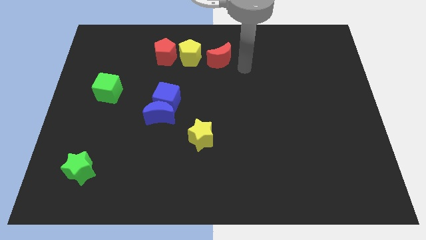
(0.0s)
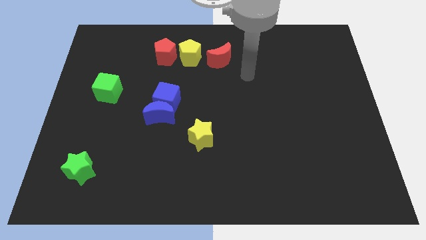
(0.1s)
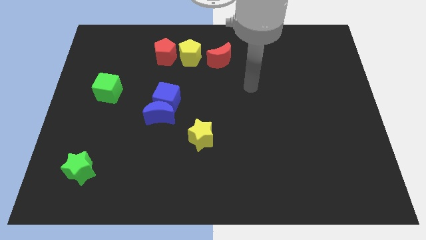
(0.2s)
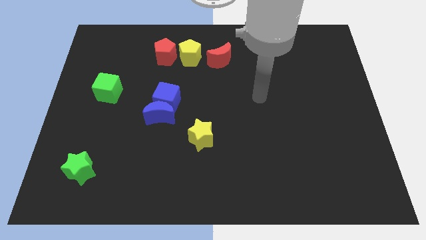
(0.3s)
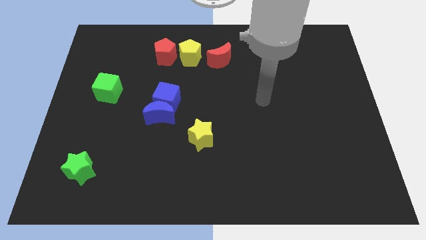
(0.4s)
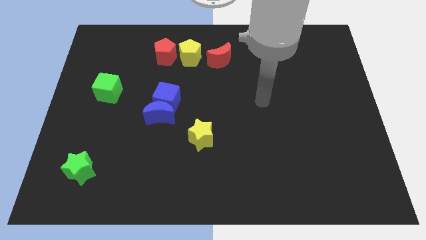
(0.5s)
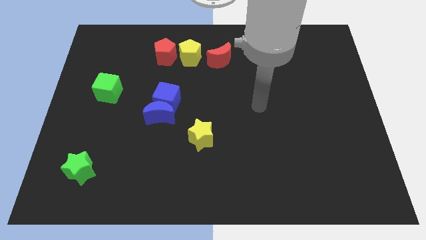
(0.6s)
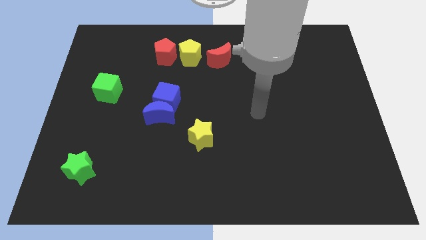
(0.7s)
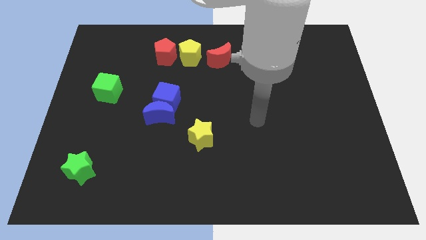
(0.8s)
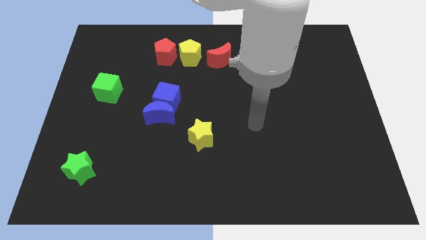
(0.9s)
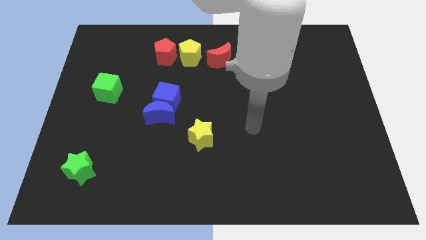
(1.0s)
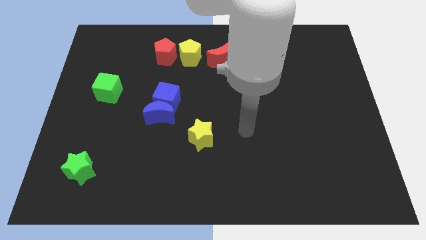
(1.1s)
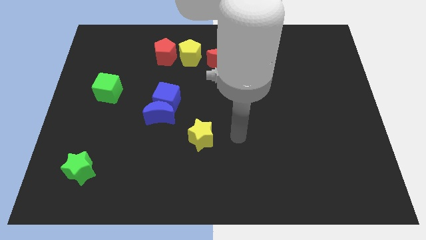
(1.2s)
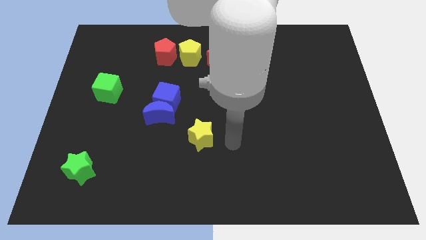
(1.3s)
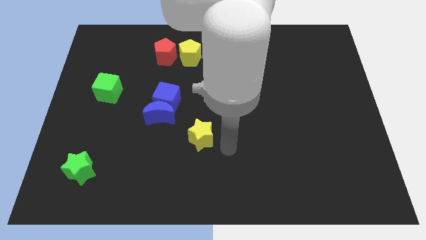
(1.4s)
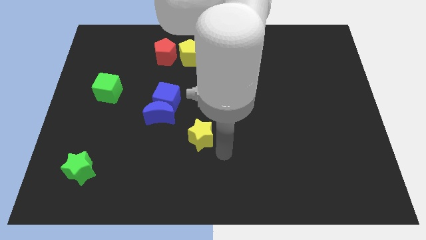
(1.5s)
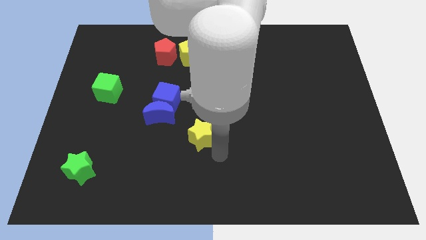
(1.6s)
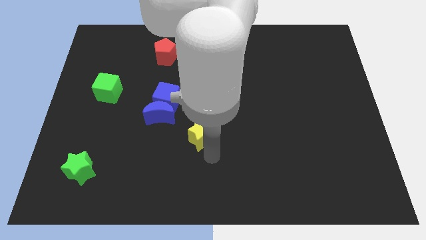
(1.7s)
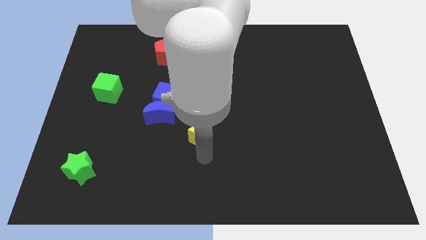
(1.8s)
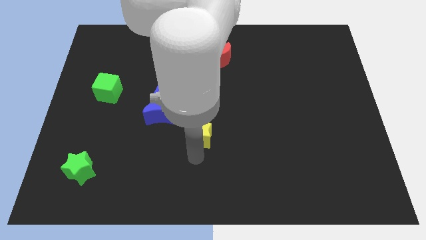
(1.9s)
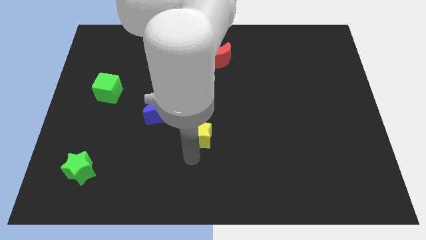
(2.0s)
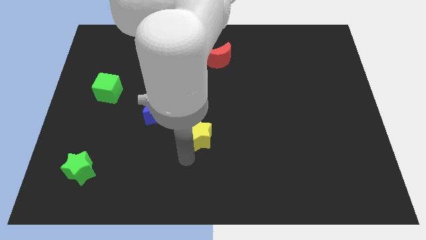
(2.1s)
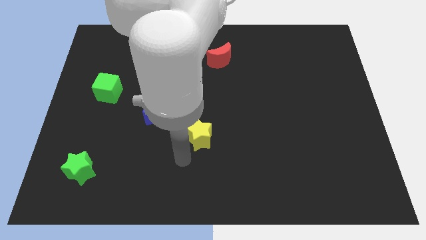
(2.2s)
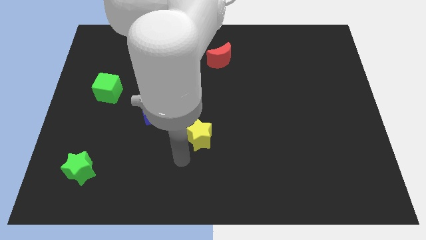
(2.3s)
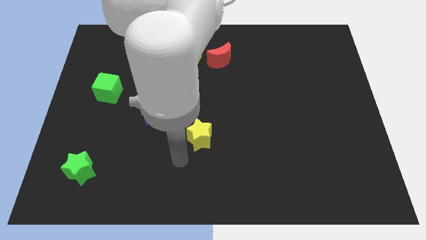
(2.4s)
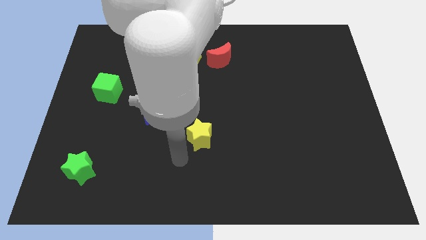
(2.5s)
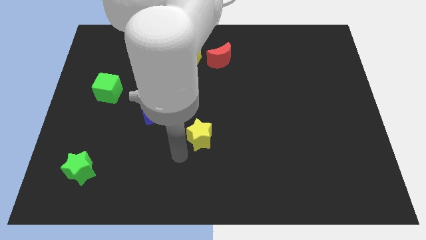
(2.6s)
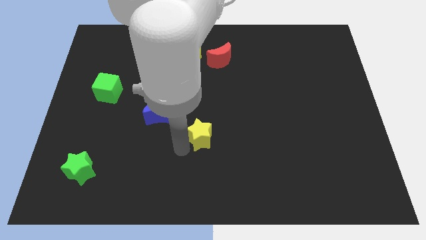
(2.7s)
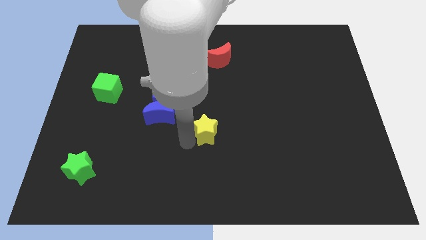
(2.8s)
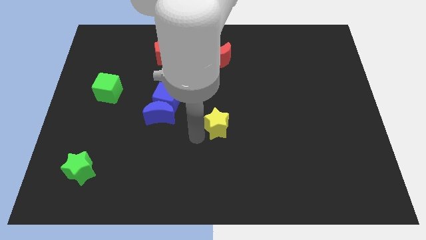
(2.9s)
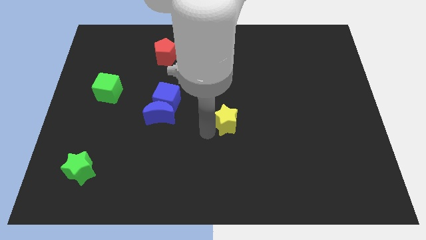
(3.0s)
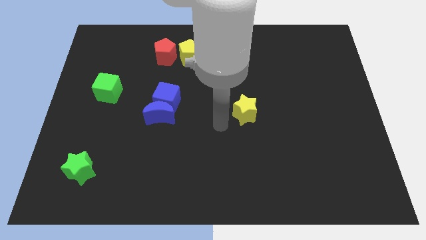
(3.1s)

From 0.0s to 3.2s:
place the yellow star horizontally to the right side of the blue moon

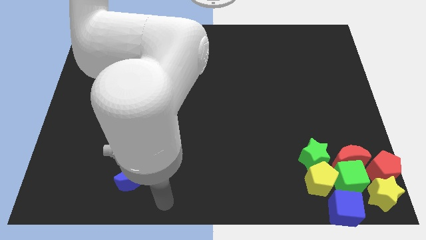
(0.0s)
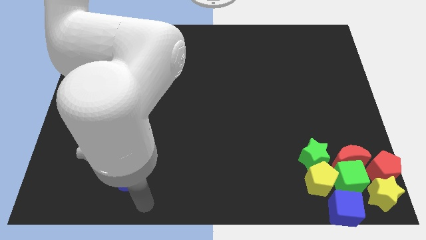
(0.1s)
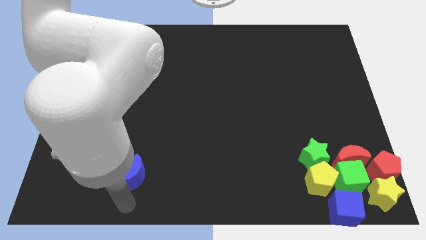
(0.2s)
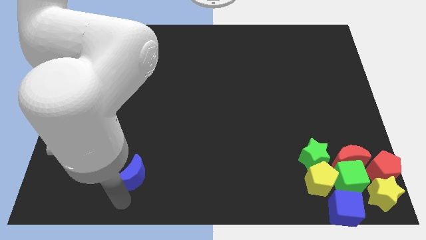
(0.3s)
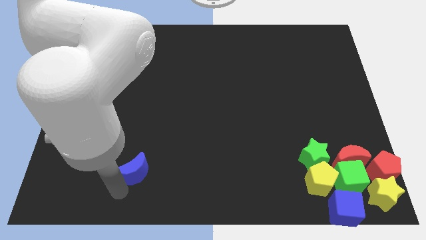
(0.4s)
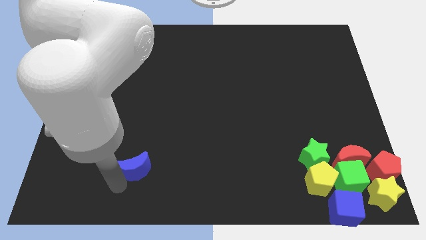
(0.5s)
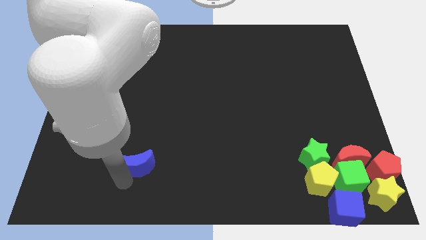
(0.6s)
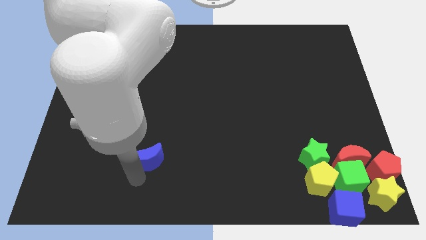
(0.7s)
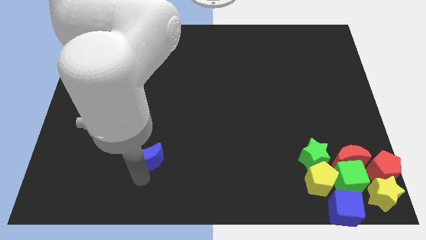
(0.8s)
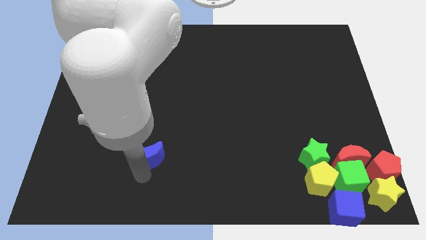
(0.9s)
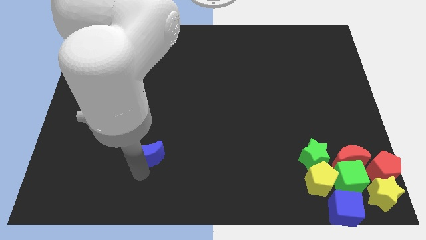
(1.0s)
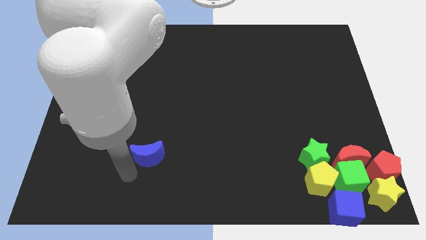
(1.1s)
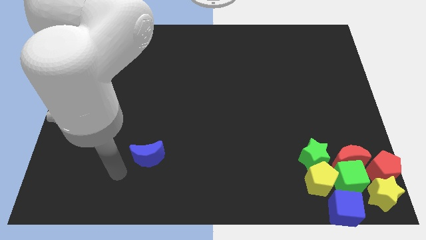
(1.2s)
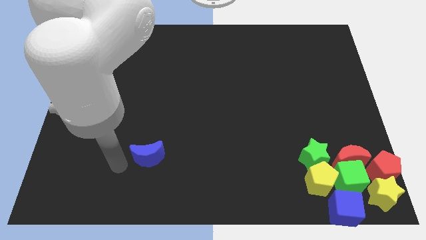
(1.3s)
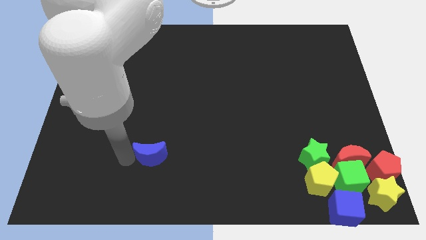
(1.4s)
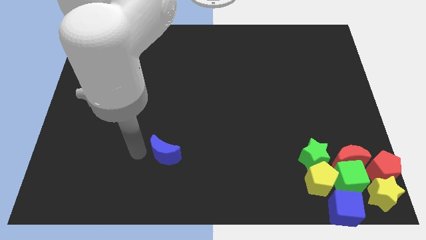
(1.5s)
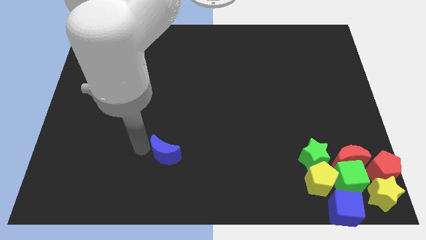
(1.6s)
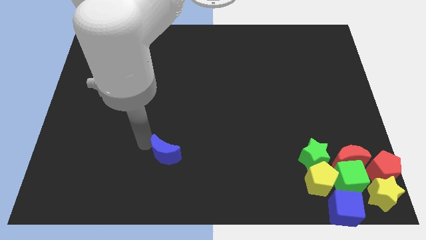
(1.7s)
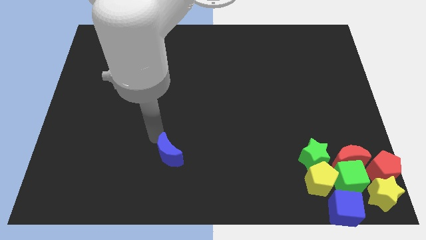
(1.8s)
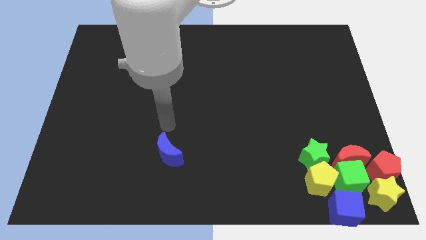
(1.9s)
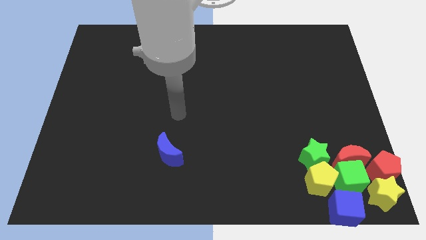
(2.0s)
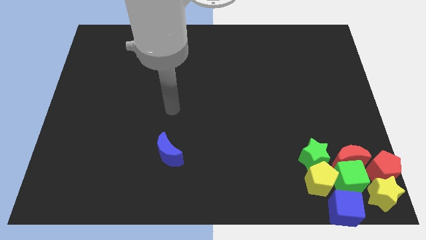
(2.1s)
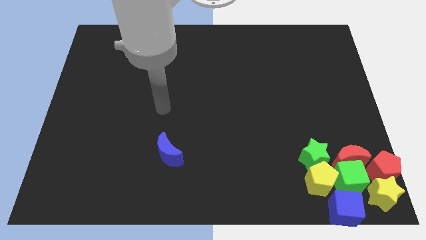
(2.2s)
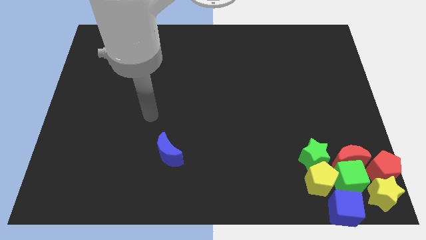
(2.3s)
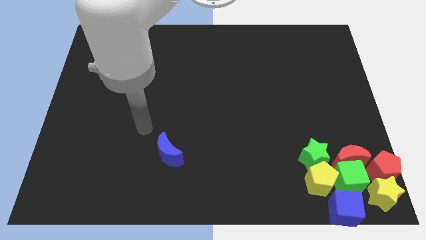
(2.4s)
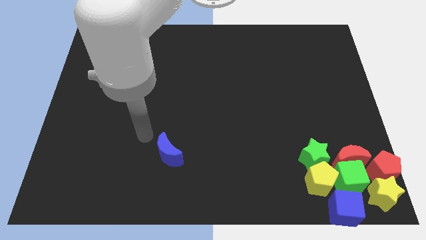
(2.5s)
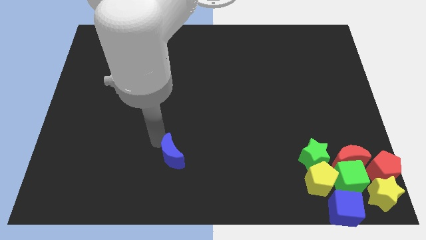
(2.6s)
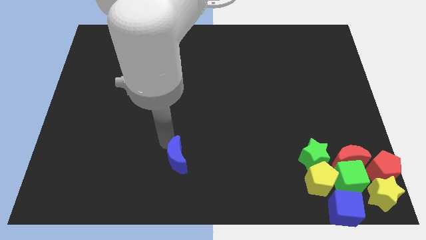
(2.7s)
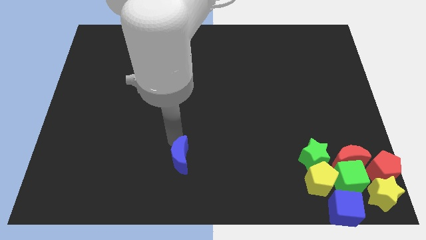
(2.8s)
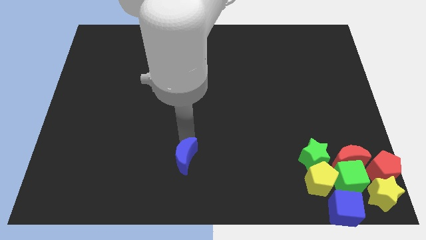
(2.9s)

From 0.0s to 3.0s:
move the blue crescent to the bottom centre of the board

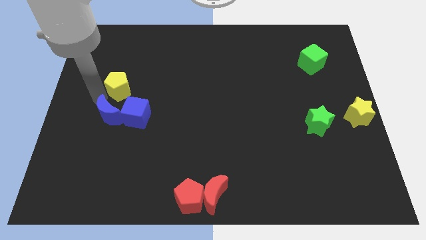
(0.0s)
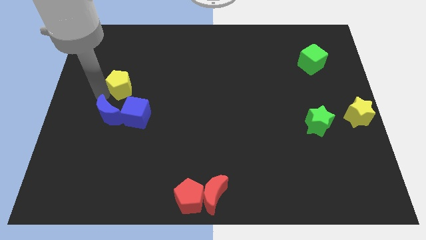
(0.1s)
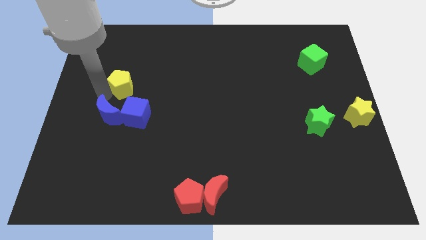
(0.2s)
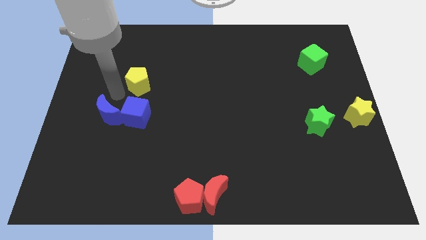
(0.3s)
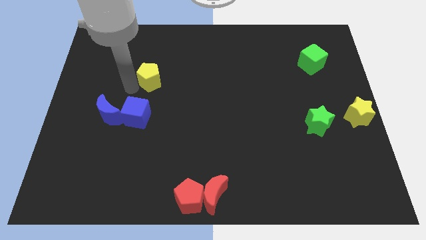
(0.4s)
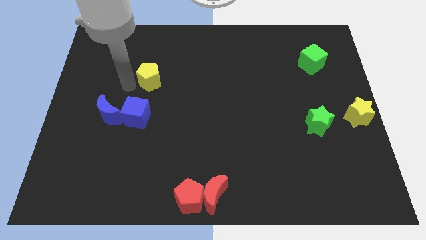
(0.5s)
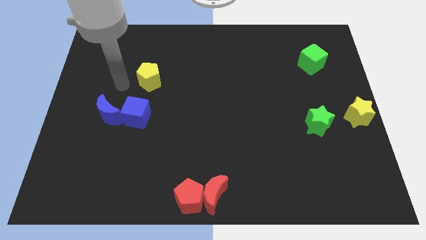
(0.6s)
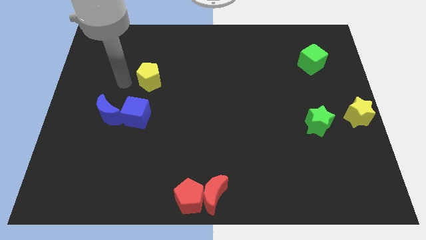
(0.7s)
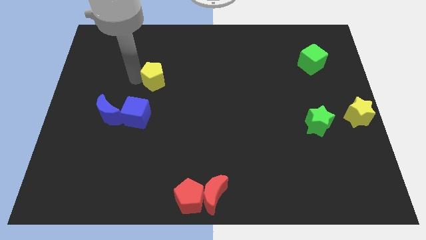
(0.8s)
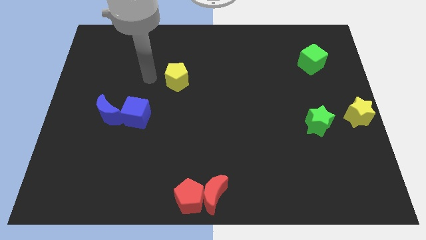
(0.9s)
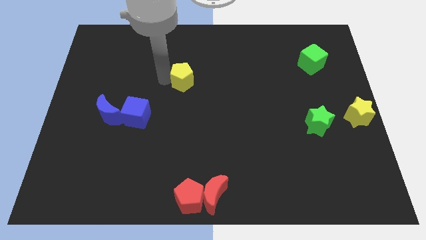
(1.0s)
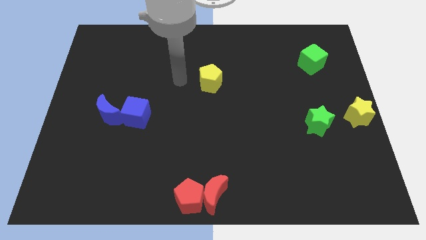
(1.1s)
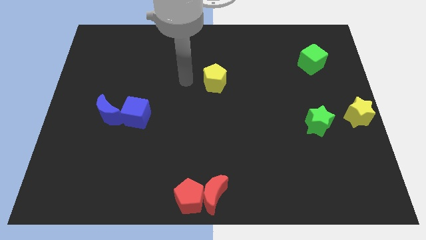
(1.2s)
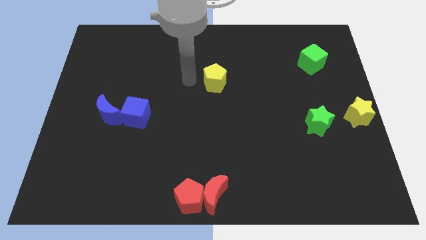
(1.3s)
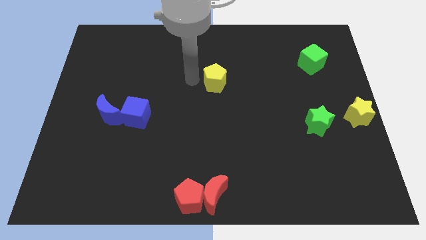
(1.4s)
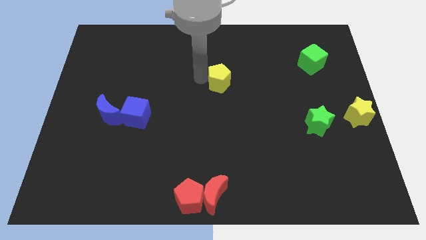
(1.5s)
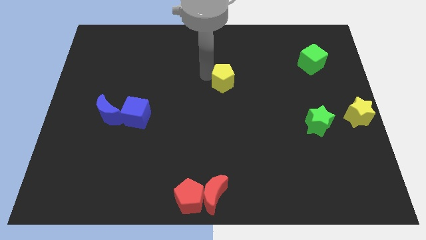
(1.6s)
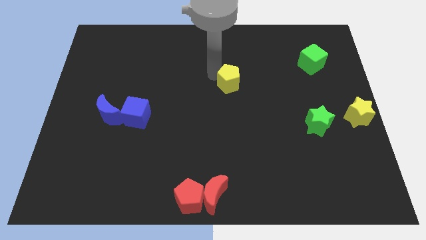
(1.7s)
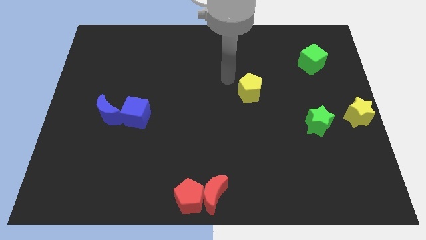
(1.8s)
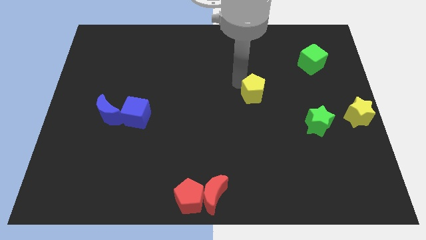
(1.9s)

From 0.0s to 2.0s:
separate the yellow pentagon from the blue moon

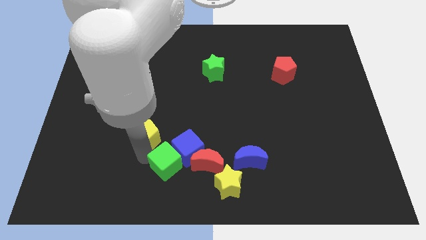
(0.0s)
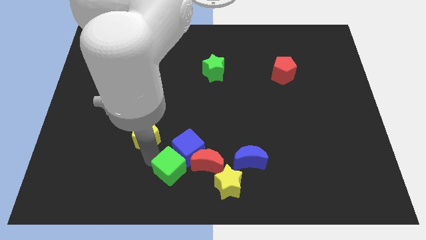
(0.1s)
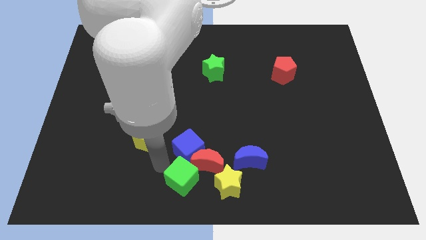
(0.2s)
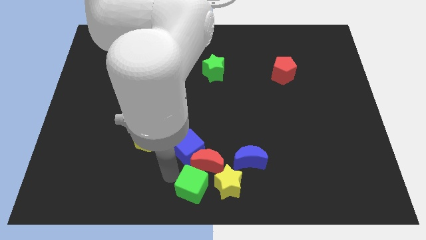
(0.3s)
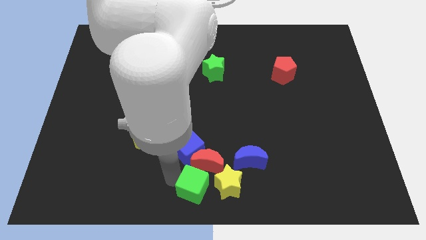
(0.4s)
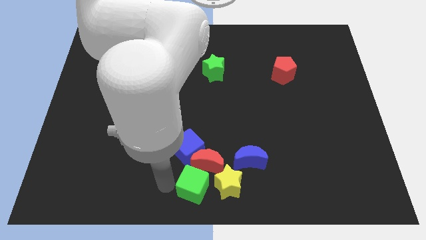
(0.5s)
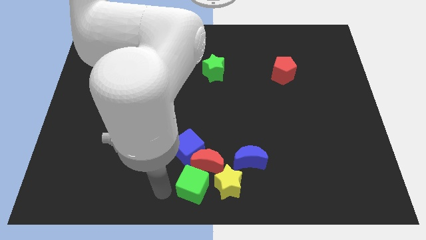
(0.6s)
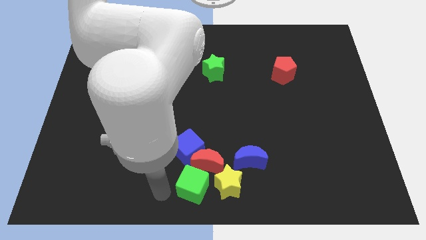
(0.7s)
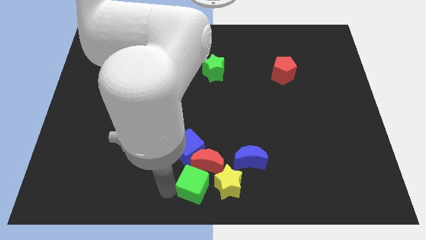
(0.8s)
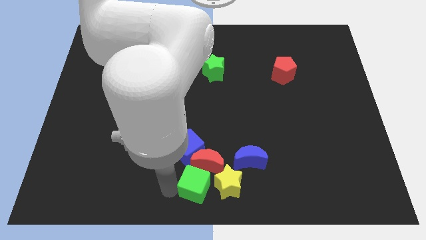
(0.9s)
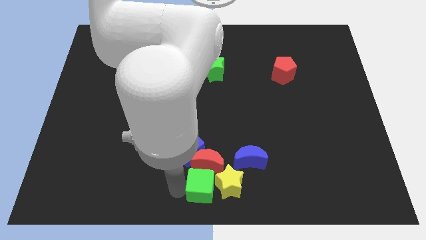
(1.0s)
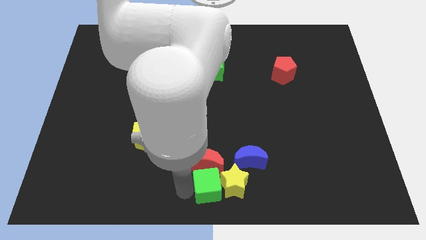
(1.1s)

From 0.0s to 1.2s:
push the green cube to the bottom side of the red crescent
